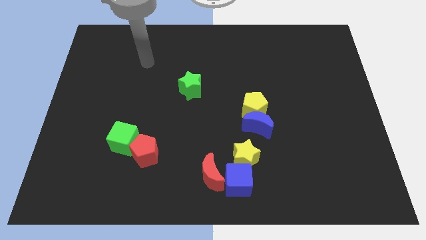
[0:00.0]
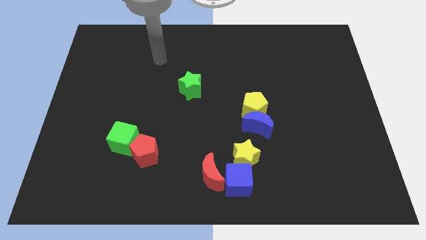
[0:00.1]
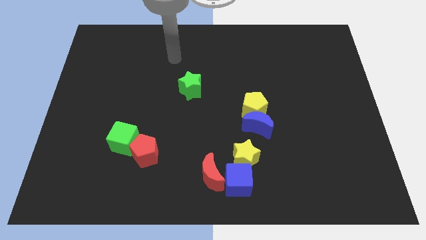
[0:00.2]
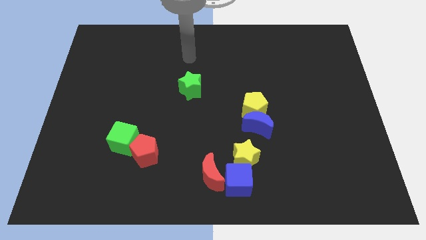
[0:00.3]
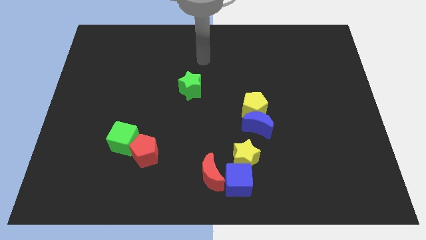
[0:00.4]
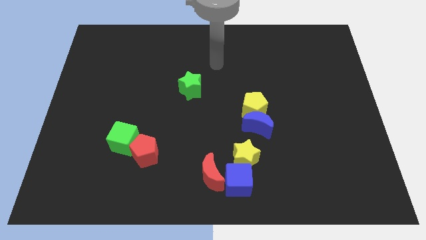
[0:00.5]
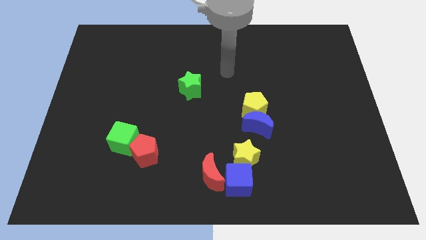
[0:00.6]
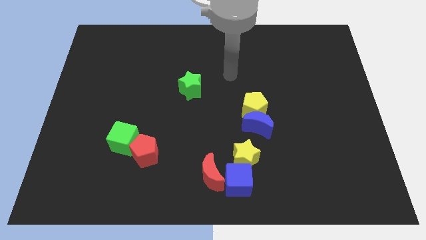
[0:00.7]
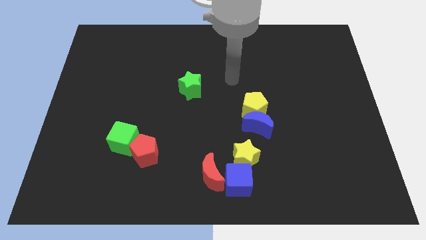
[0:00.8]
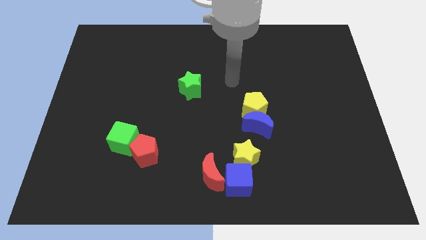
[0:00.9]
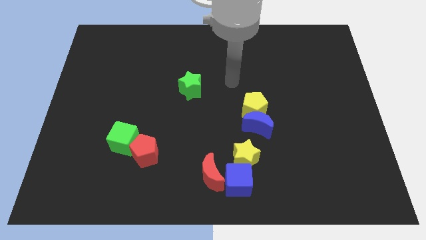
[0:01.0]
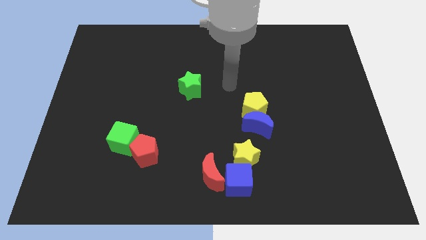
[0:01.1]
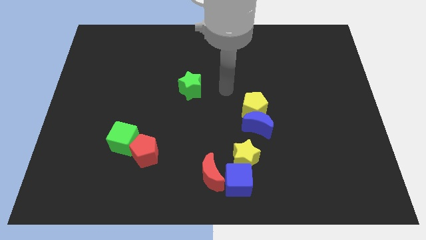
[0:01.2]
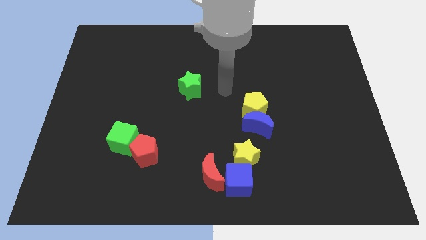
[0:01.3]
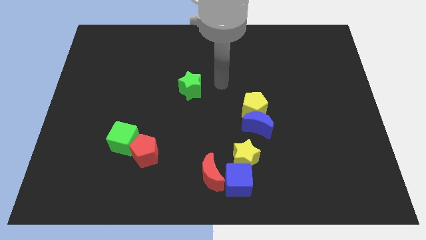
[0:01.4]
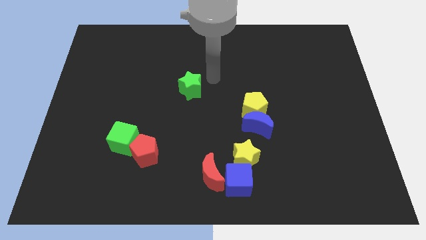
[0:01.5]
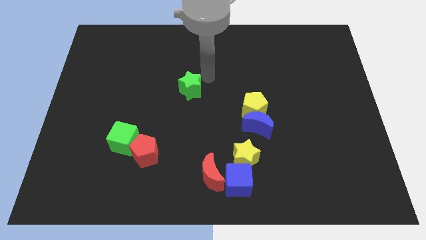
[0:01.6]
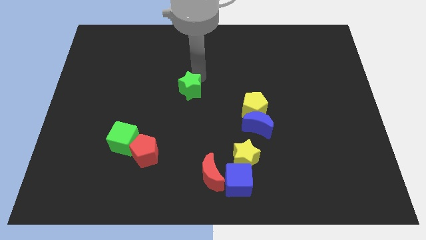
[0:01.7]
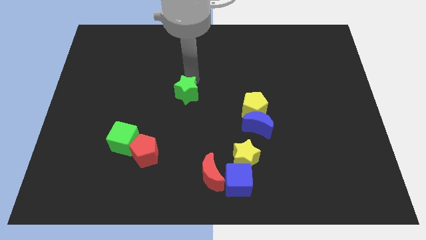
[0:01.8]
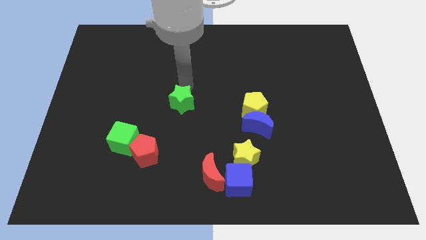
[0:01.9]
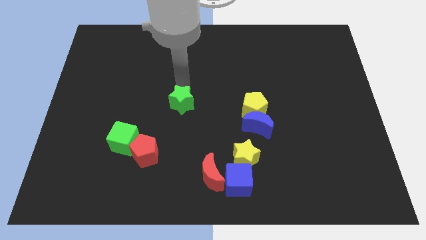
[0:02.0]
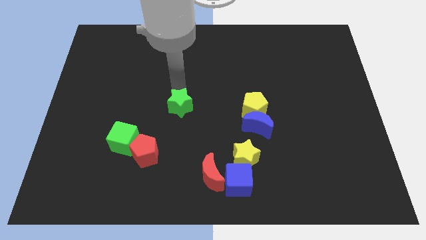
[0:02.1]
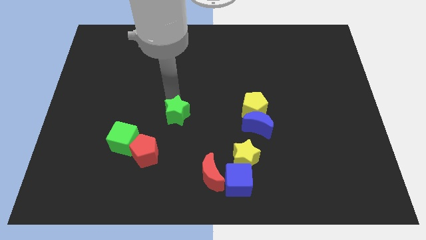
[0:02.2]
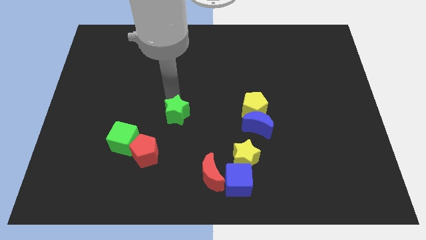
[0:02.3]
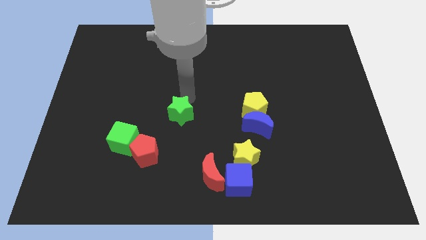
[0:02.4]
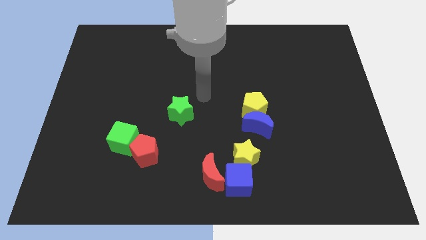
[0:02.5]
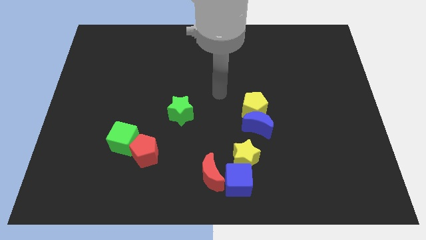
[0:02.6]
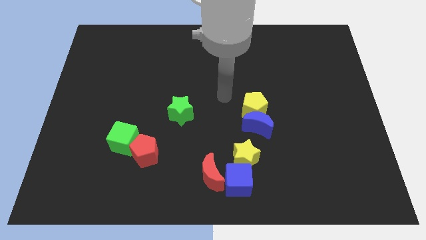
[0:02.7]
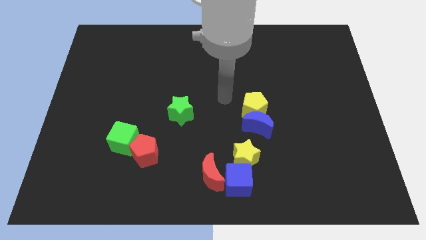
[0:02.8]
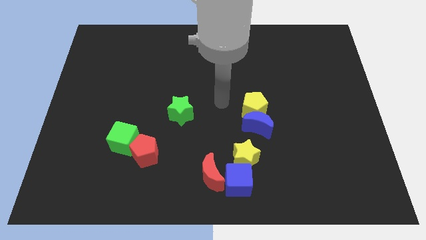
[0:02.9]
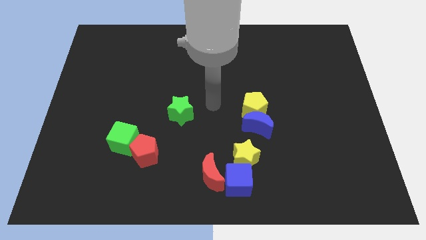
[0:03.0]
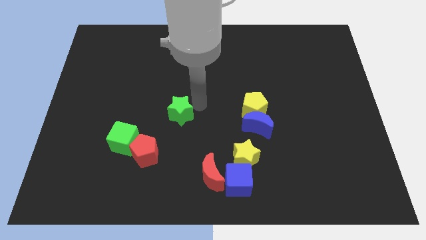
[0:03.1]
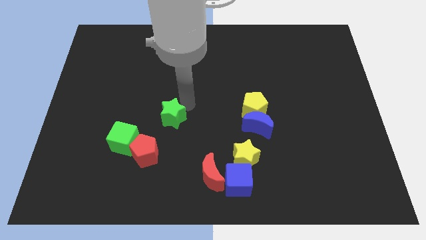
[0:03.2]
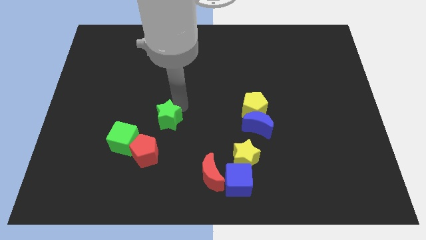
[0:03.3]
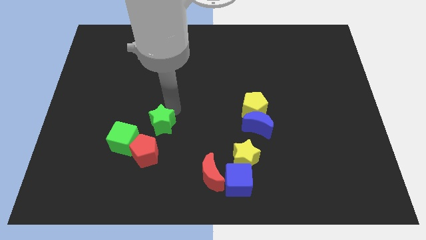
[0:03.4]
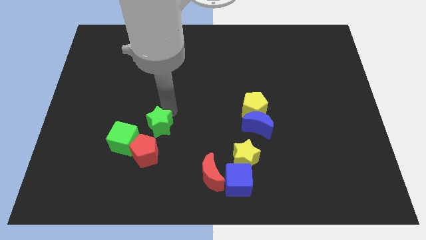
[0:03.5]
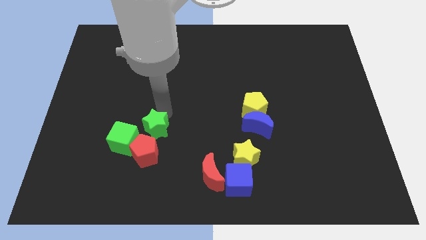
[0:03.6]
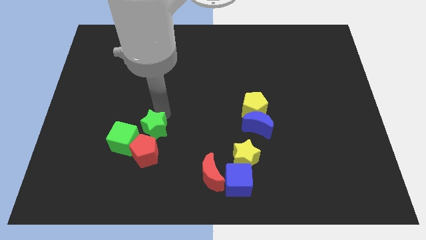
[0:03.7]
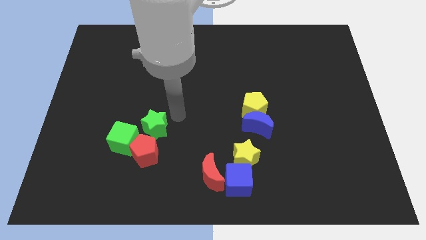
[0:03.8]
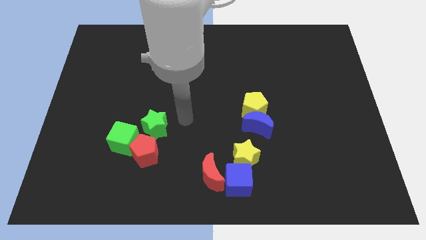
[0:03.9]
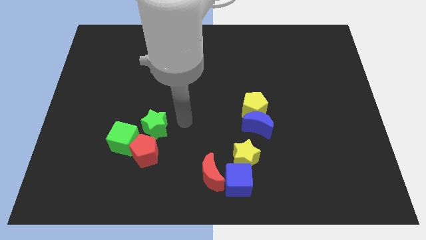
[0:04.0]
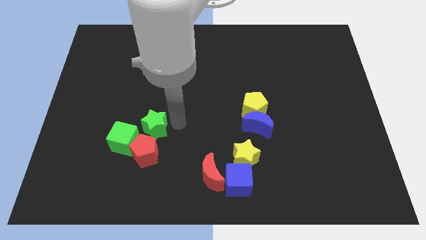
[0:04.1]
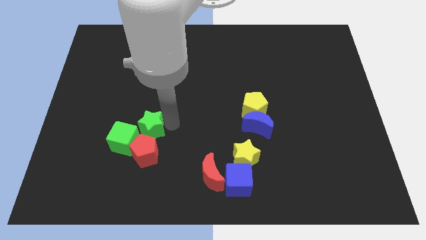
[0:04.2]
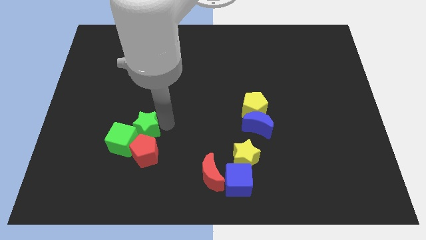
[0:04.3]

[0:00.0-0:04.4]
push the green star into the green cube

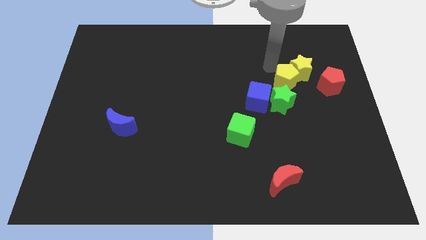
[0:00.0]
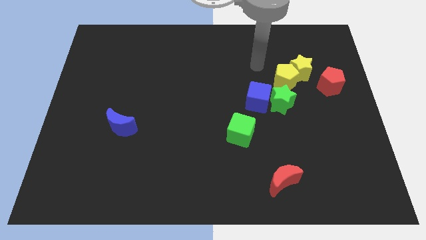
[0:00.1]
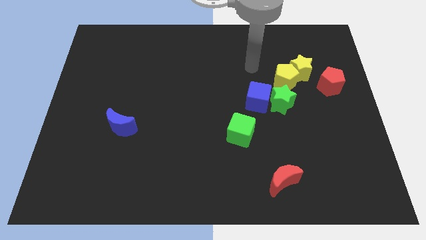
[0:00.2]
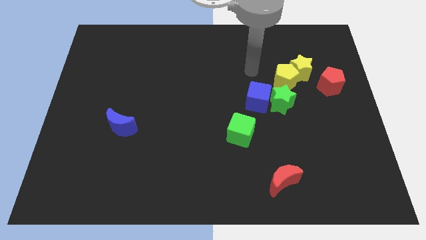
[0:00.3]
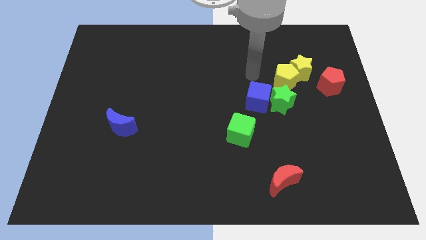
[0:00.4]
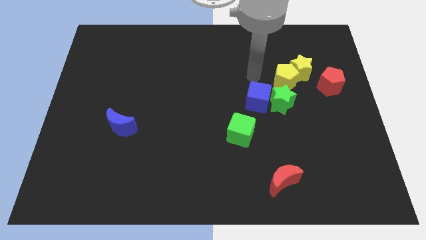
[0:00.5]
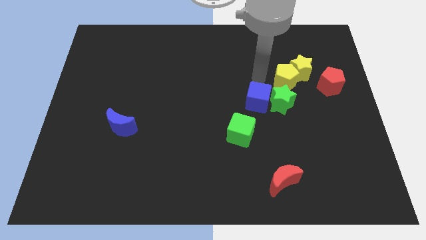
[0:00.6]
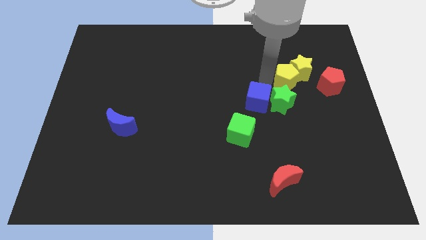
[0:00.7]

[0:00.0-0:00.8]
move your arm near the blue cube

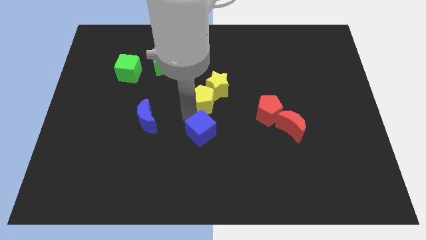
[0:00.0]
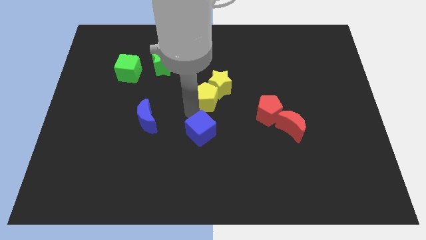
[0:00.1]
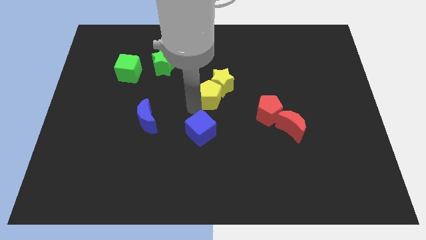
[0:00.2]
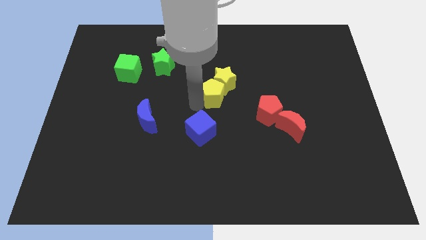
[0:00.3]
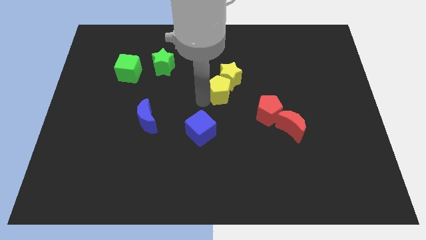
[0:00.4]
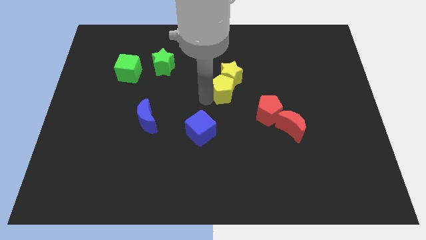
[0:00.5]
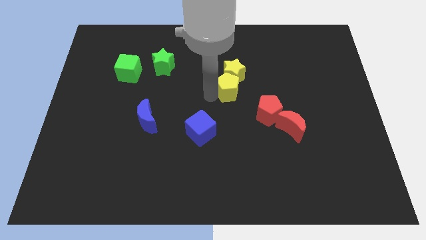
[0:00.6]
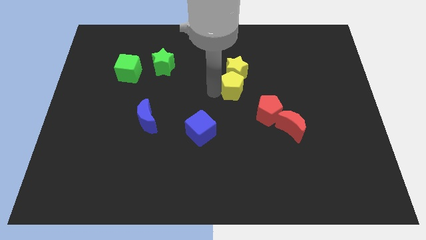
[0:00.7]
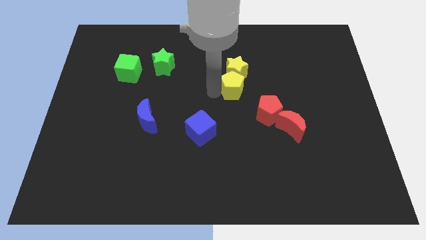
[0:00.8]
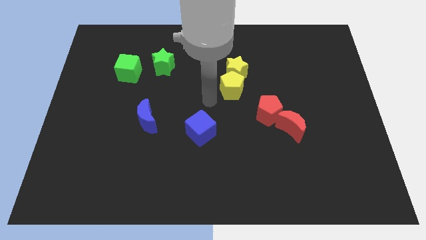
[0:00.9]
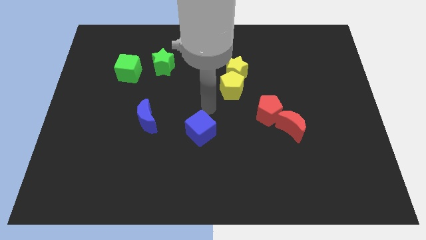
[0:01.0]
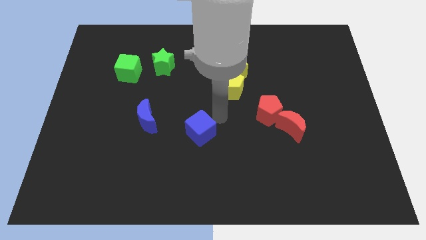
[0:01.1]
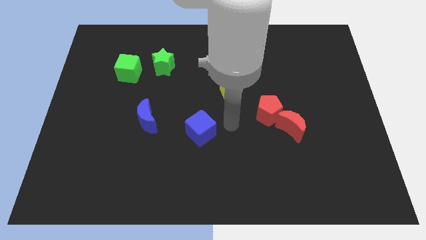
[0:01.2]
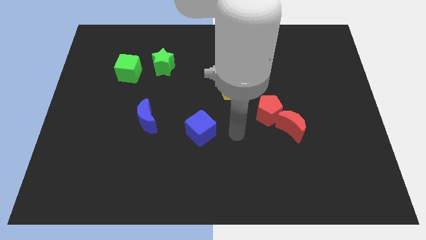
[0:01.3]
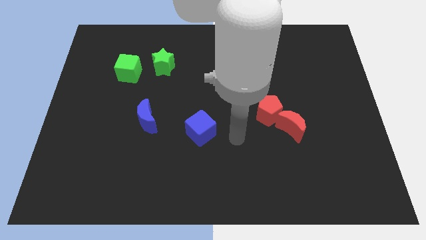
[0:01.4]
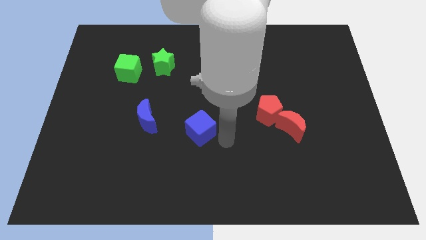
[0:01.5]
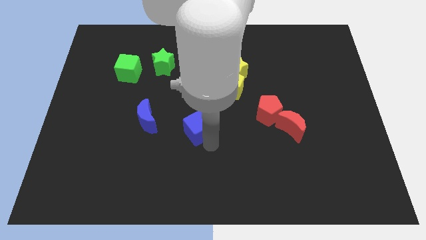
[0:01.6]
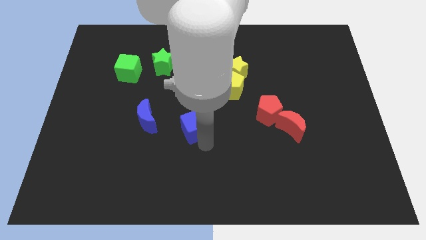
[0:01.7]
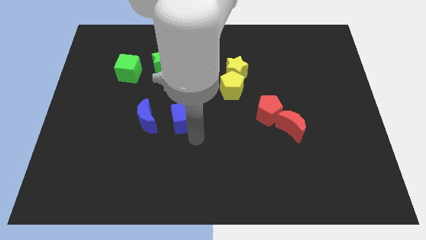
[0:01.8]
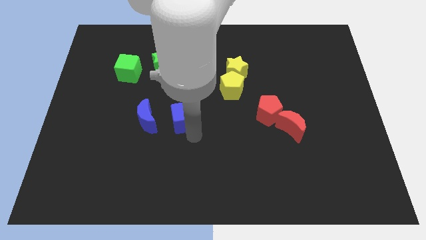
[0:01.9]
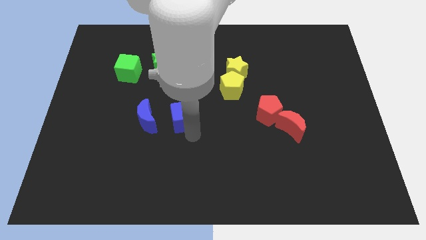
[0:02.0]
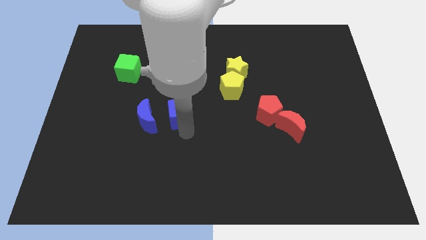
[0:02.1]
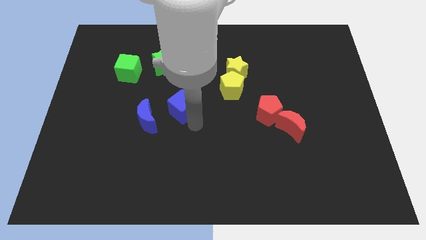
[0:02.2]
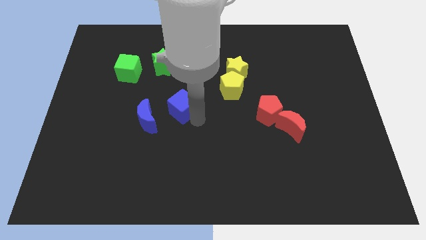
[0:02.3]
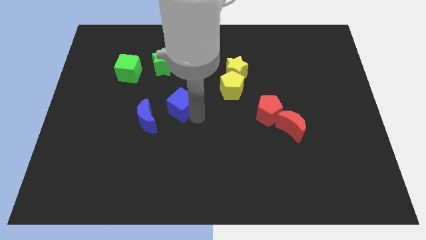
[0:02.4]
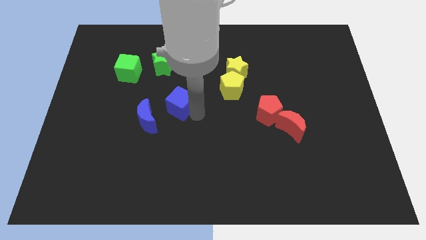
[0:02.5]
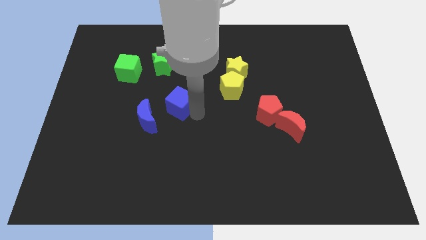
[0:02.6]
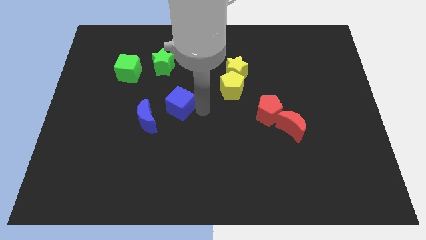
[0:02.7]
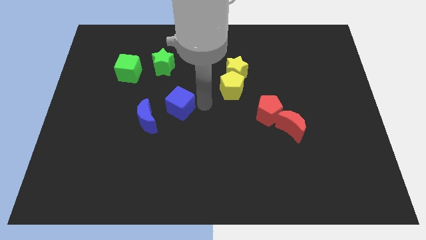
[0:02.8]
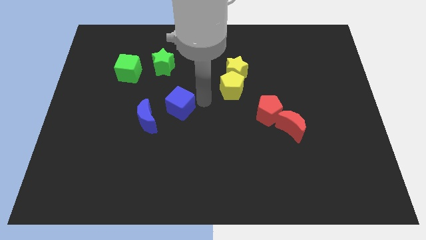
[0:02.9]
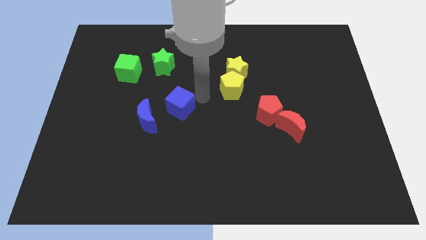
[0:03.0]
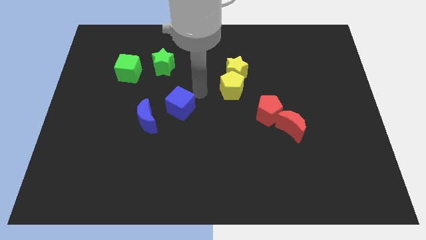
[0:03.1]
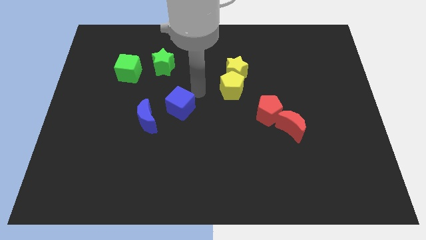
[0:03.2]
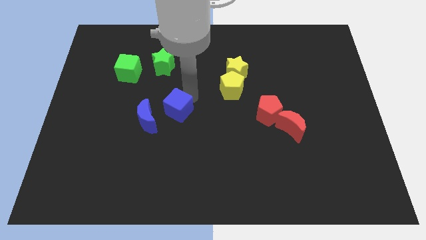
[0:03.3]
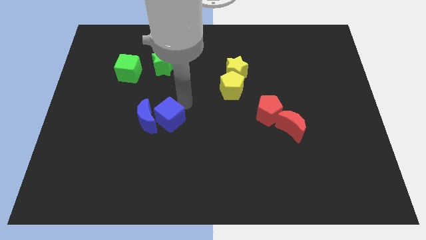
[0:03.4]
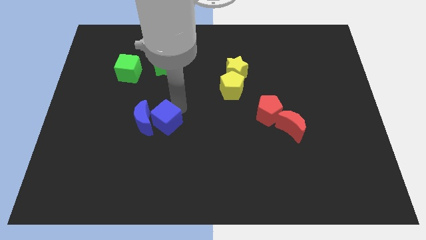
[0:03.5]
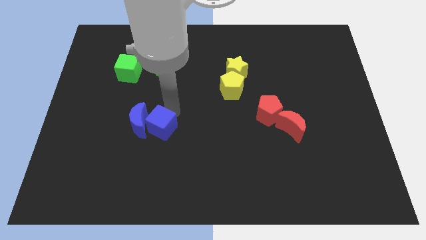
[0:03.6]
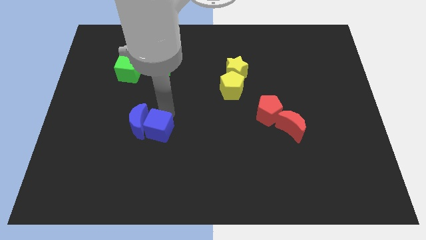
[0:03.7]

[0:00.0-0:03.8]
put the blue blocks diagonally on the bottom left side of the yellow blocks
